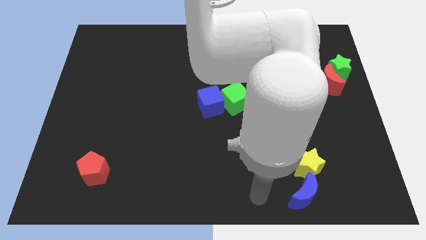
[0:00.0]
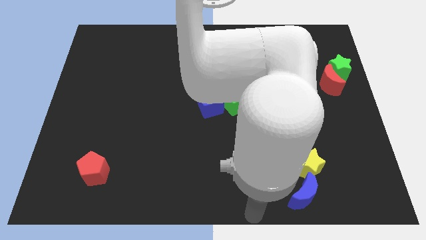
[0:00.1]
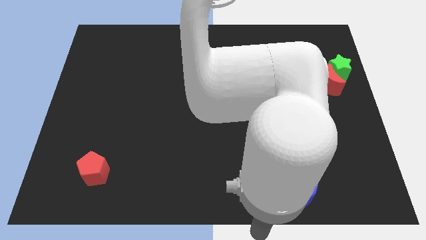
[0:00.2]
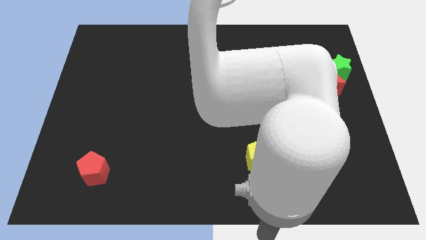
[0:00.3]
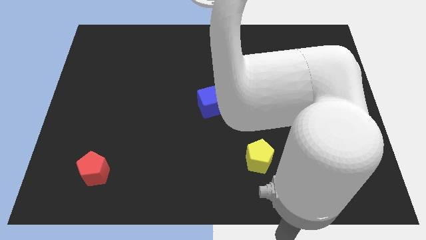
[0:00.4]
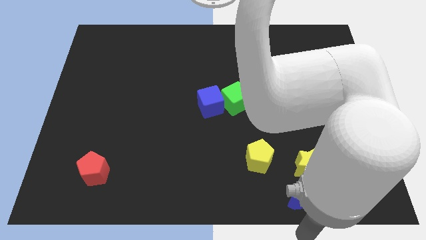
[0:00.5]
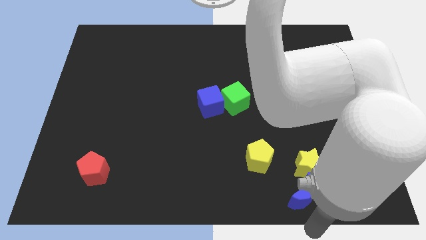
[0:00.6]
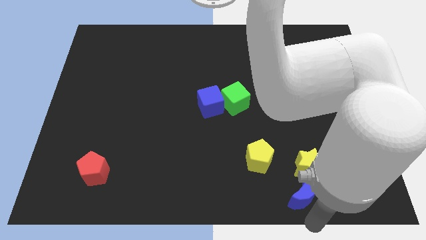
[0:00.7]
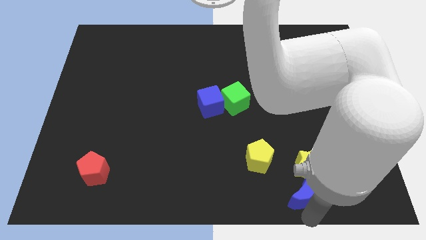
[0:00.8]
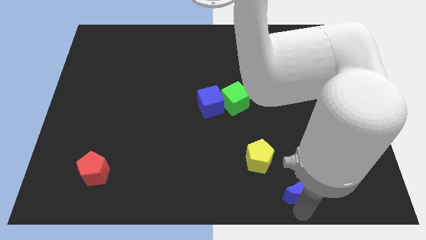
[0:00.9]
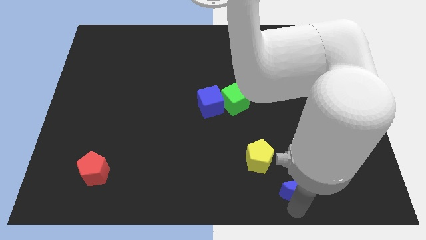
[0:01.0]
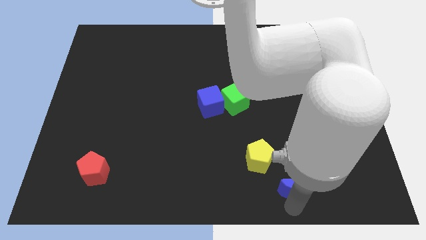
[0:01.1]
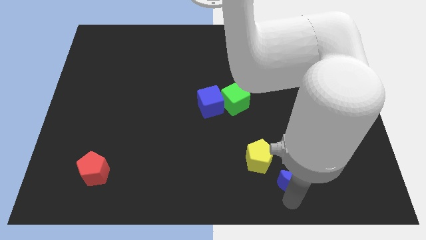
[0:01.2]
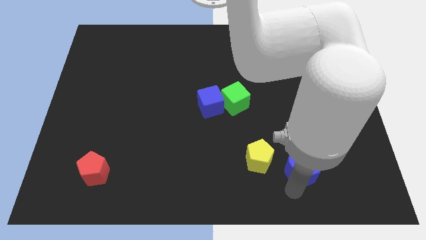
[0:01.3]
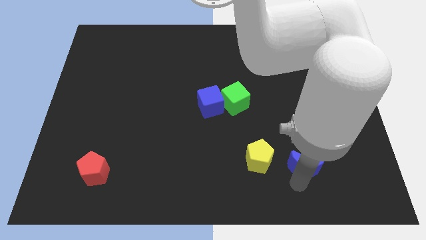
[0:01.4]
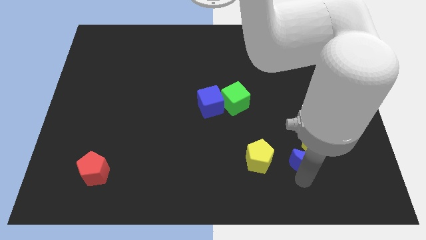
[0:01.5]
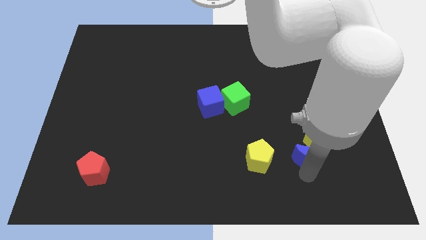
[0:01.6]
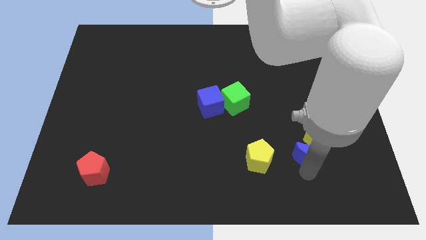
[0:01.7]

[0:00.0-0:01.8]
push the blue crescent into the yellow star

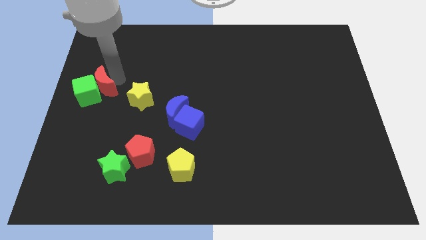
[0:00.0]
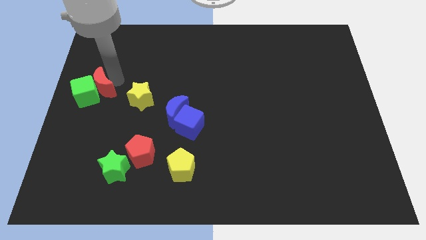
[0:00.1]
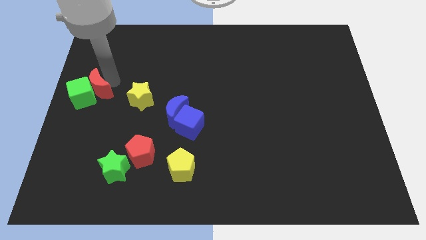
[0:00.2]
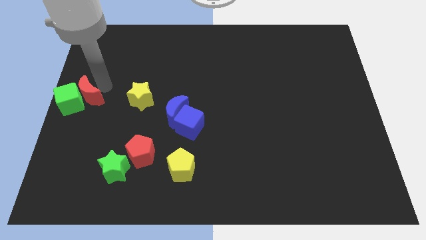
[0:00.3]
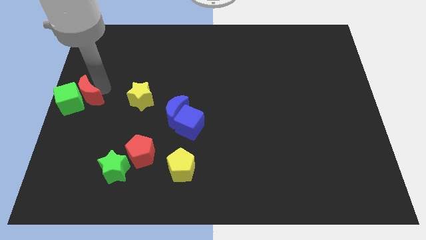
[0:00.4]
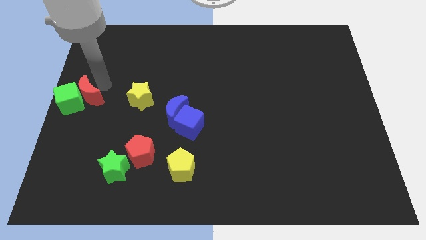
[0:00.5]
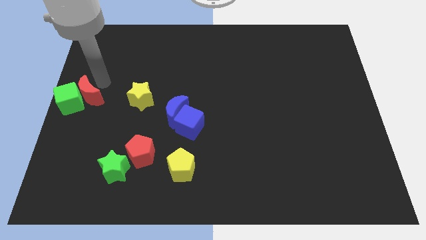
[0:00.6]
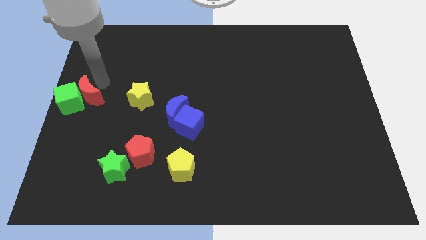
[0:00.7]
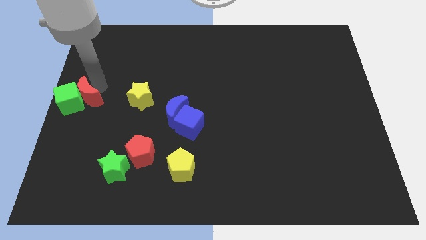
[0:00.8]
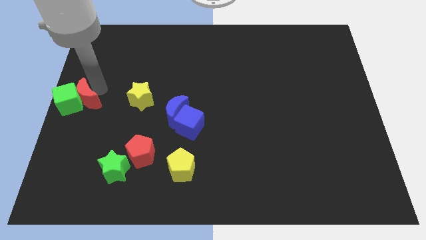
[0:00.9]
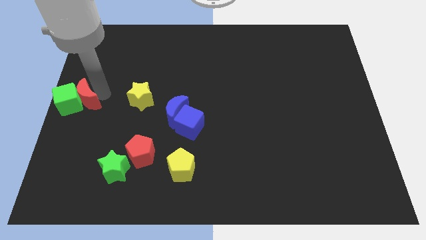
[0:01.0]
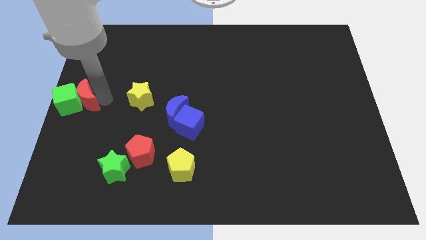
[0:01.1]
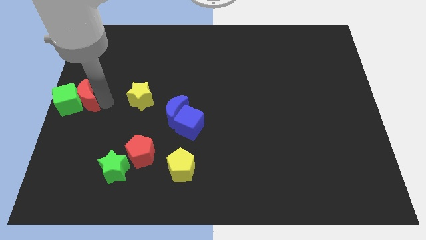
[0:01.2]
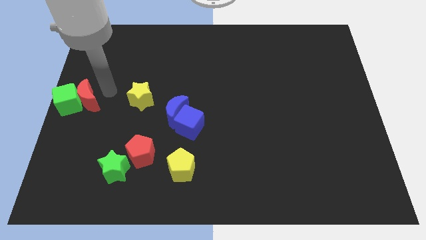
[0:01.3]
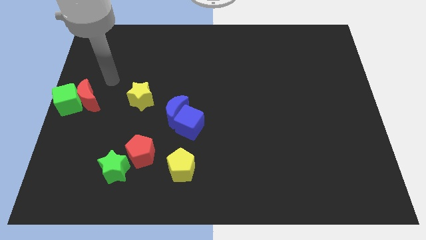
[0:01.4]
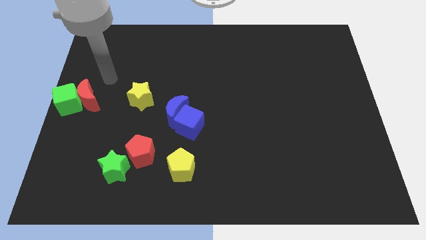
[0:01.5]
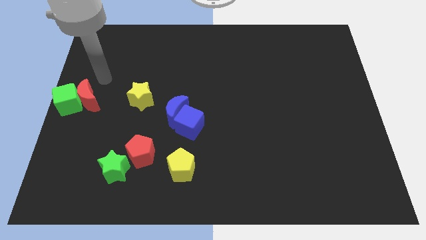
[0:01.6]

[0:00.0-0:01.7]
drag the green cube and the red crescent away from the yellow star

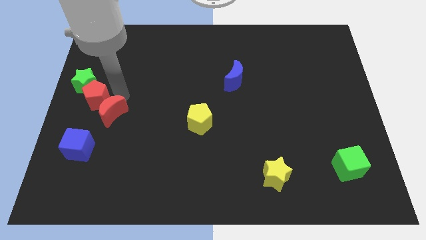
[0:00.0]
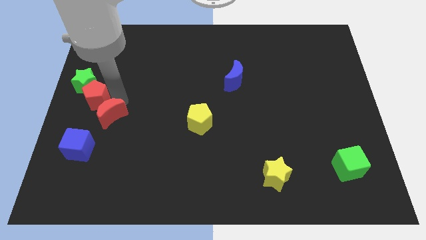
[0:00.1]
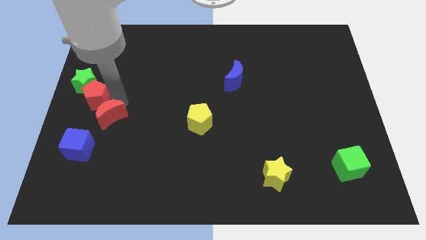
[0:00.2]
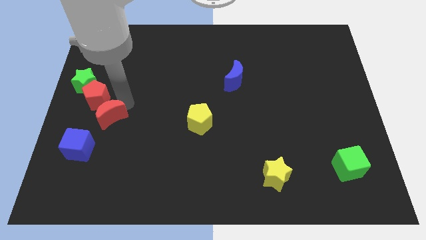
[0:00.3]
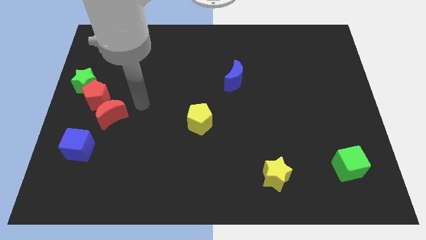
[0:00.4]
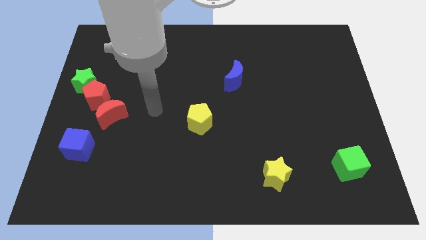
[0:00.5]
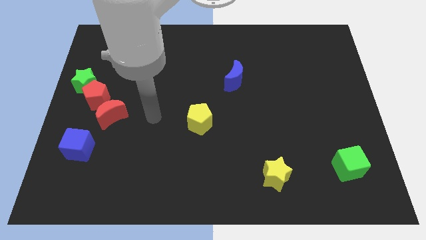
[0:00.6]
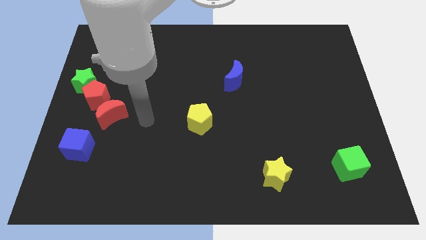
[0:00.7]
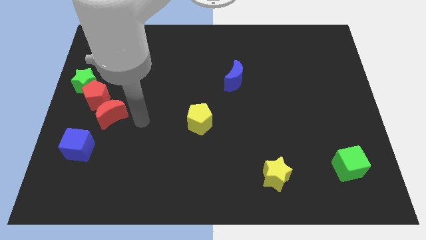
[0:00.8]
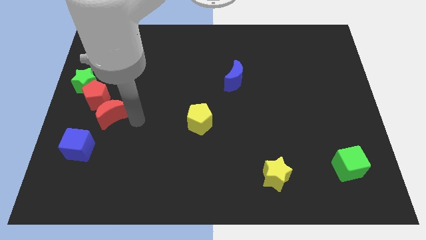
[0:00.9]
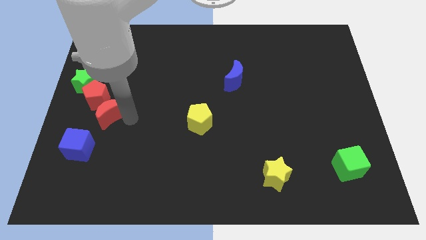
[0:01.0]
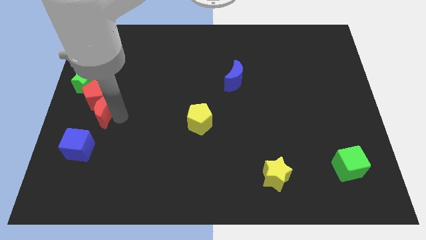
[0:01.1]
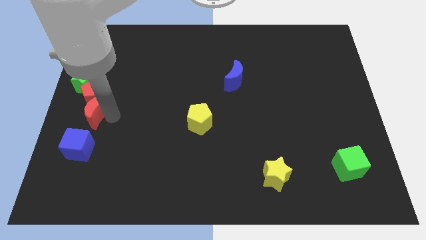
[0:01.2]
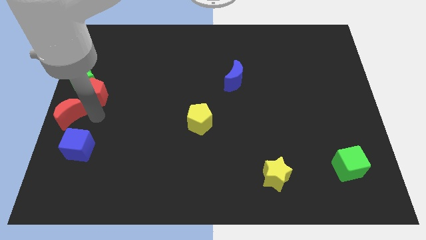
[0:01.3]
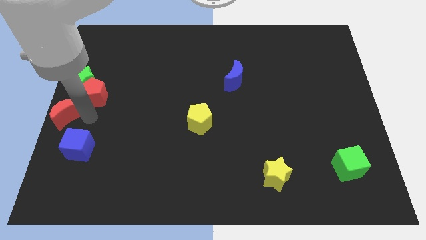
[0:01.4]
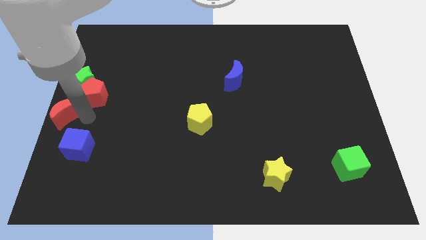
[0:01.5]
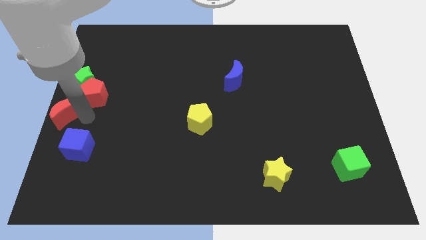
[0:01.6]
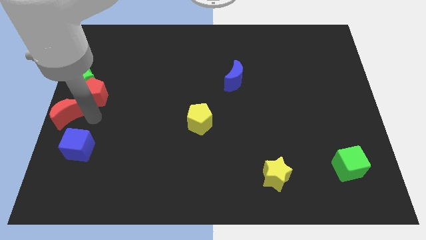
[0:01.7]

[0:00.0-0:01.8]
push the red crescent diagonal above the blue cube

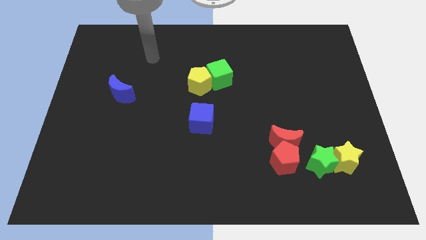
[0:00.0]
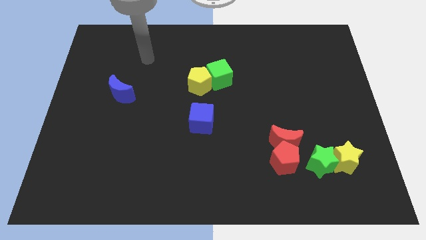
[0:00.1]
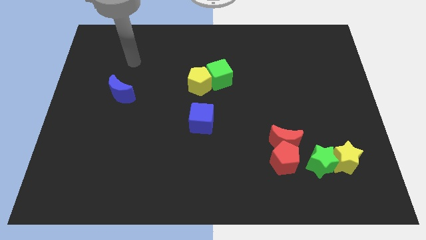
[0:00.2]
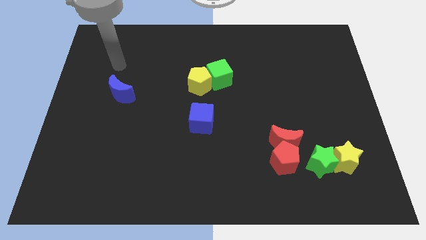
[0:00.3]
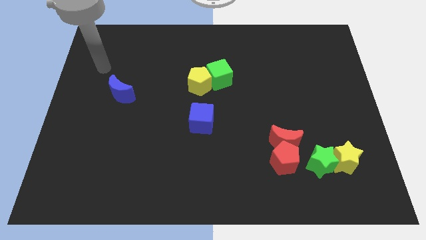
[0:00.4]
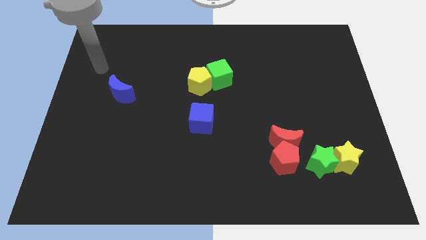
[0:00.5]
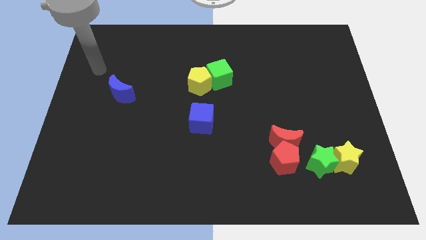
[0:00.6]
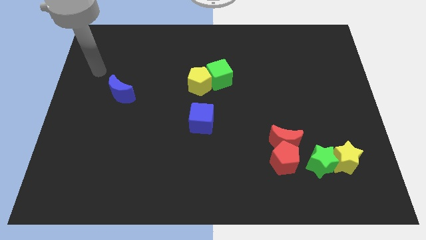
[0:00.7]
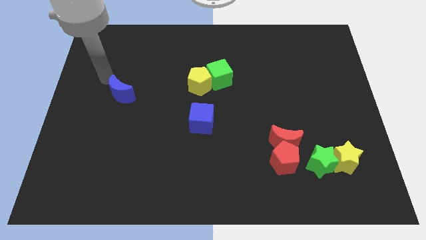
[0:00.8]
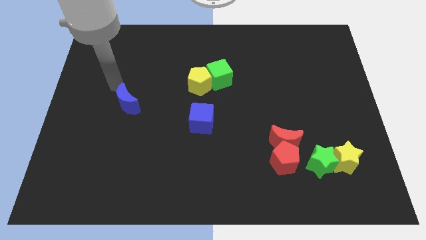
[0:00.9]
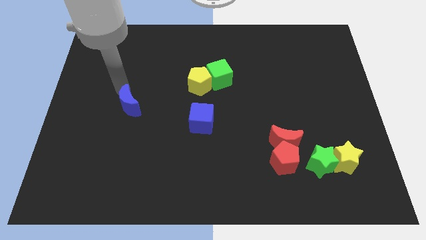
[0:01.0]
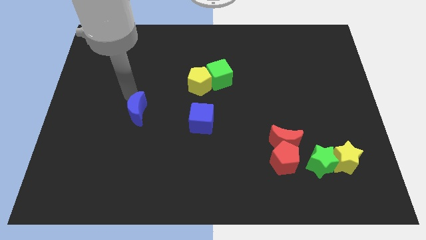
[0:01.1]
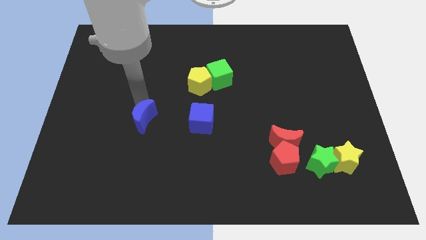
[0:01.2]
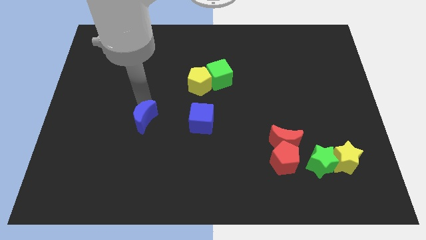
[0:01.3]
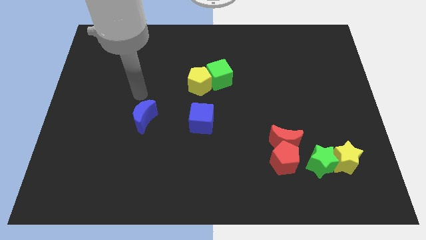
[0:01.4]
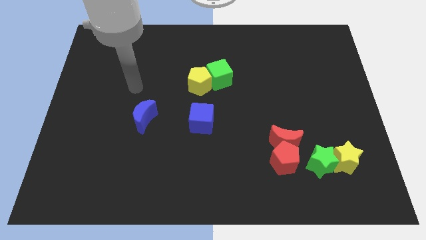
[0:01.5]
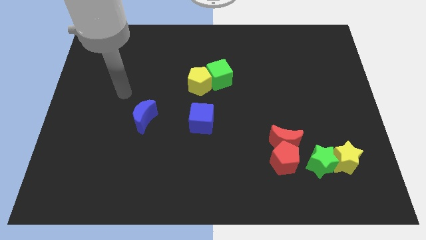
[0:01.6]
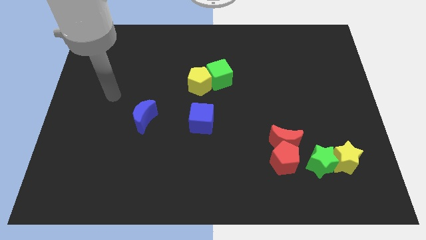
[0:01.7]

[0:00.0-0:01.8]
move the blue moon to the left of the blue cube

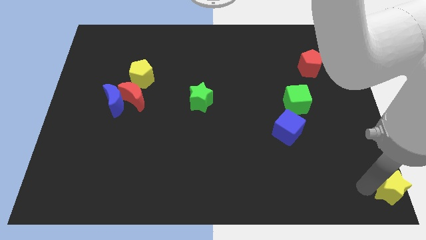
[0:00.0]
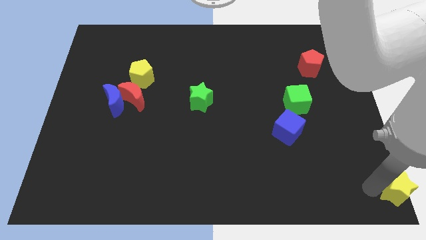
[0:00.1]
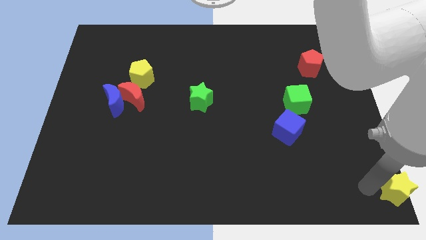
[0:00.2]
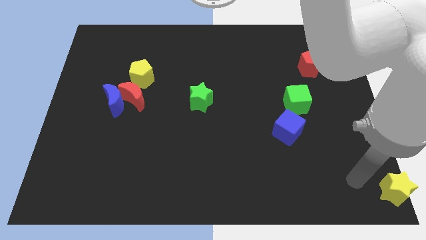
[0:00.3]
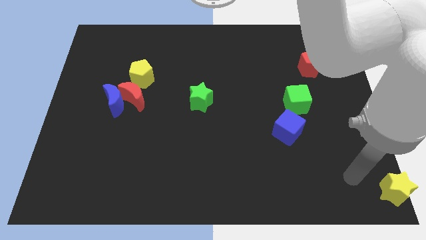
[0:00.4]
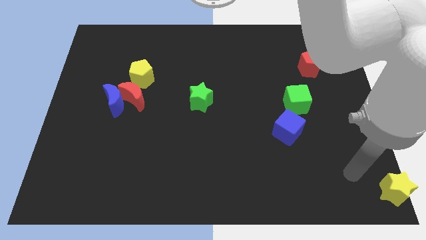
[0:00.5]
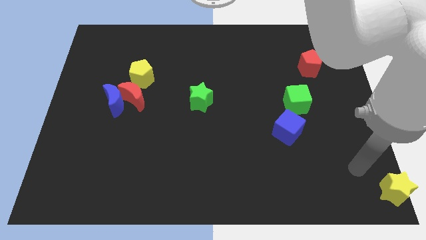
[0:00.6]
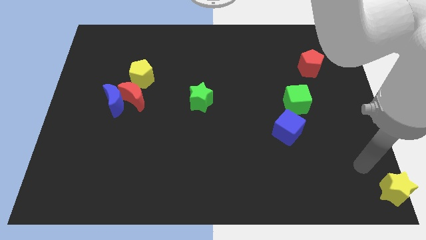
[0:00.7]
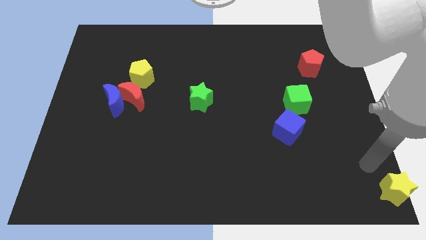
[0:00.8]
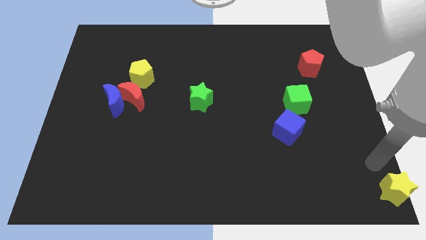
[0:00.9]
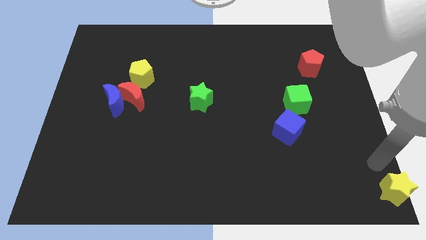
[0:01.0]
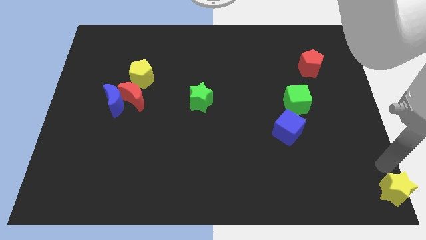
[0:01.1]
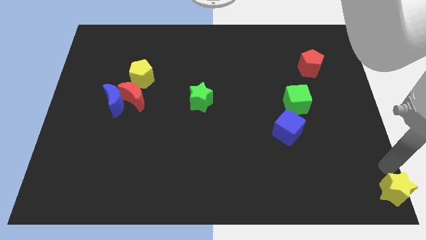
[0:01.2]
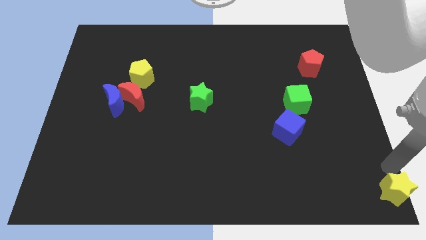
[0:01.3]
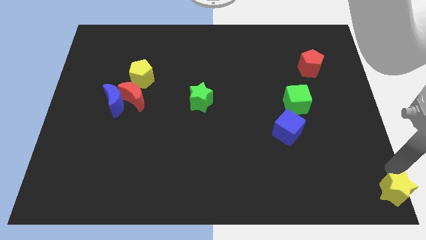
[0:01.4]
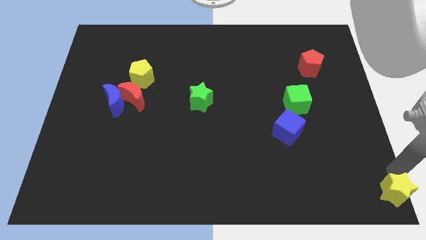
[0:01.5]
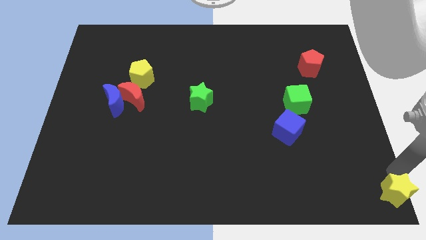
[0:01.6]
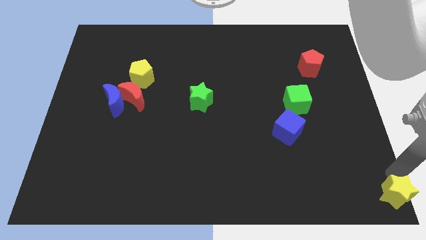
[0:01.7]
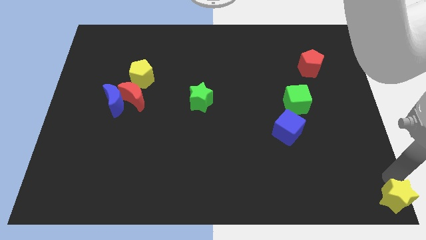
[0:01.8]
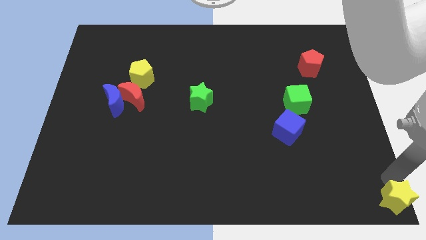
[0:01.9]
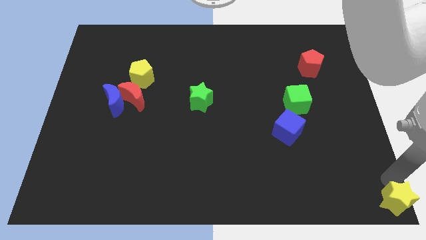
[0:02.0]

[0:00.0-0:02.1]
push the yellow star diagonal to blue cube
